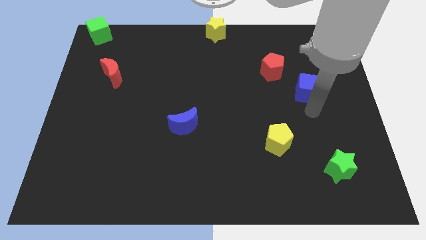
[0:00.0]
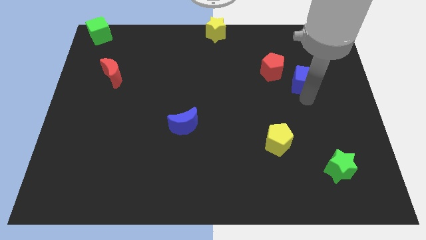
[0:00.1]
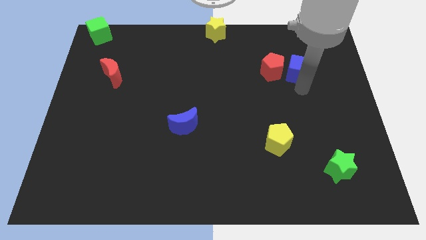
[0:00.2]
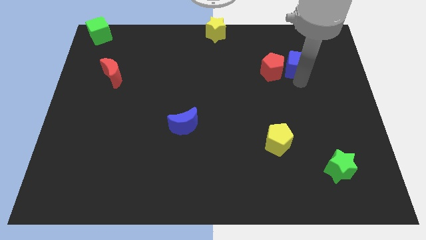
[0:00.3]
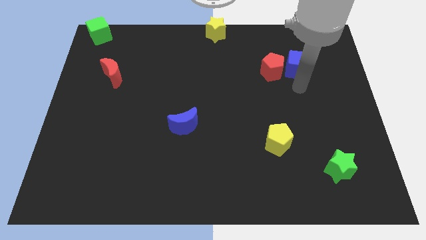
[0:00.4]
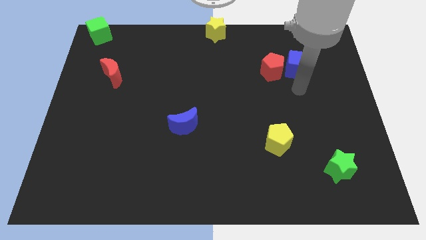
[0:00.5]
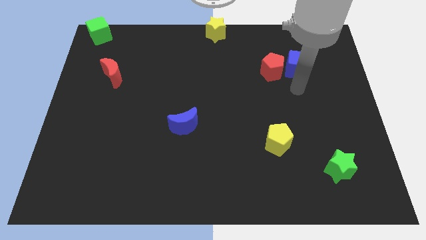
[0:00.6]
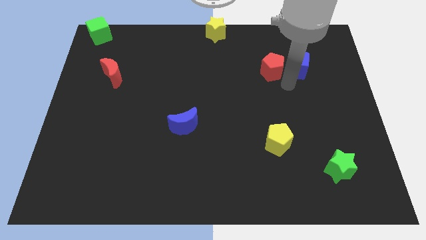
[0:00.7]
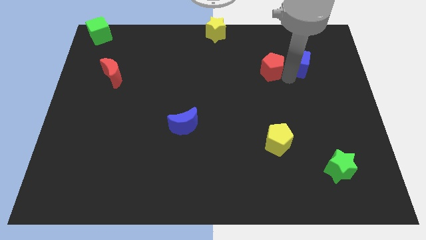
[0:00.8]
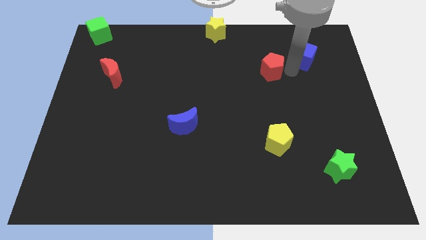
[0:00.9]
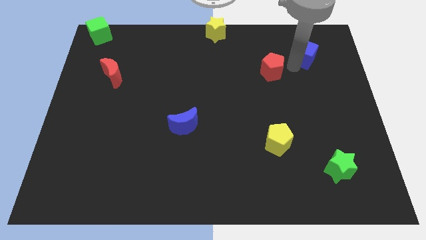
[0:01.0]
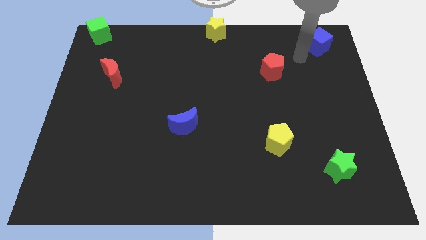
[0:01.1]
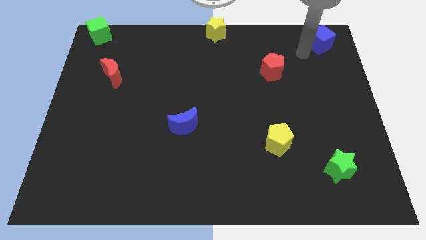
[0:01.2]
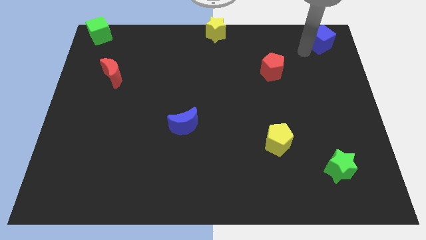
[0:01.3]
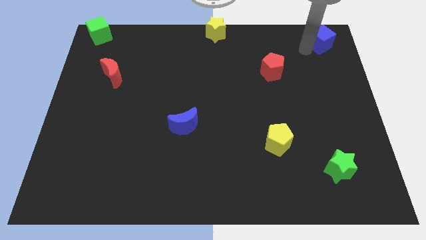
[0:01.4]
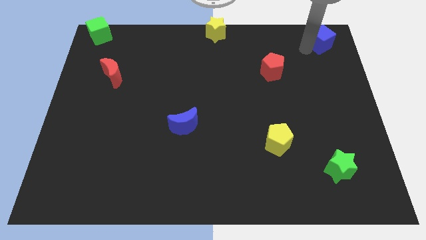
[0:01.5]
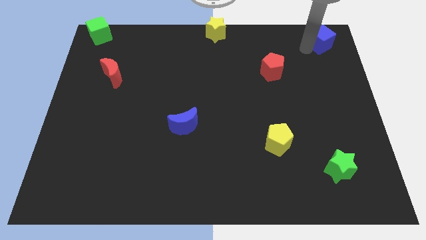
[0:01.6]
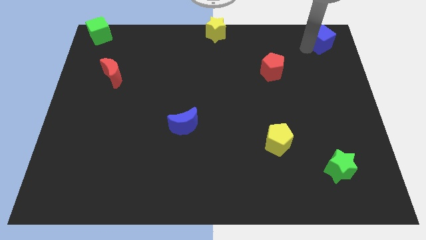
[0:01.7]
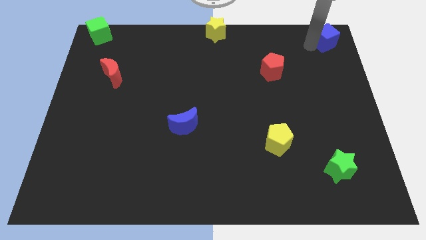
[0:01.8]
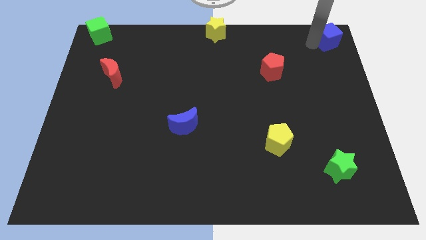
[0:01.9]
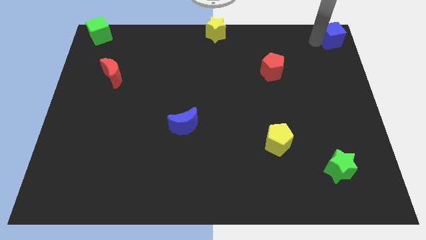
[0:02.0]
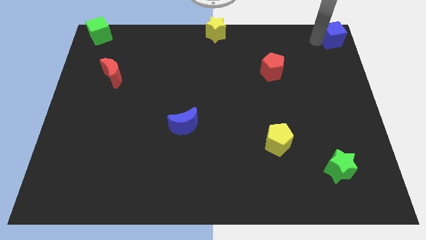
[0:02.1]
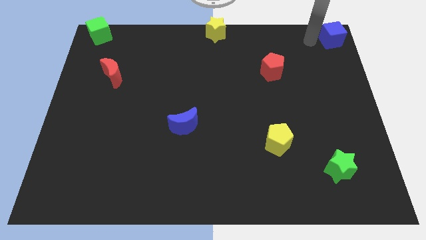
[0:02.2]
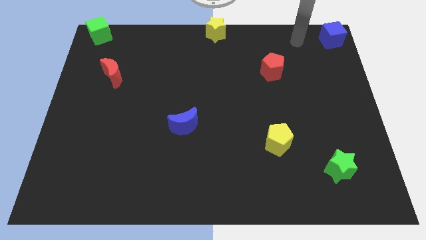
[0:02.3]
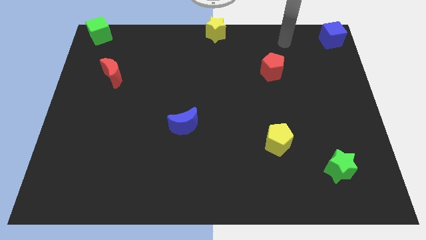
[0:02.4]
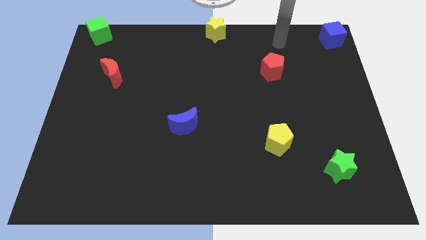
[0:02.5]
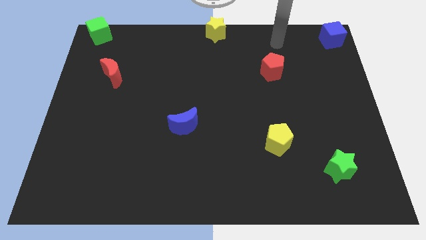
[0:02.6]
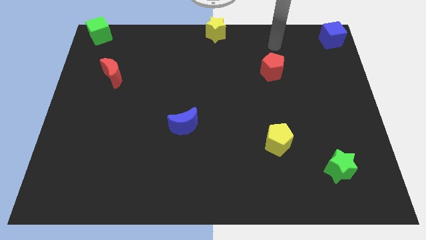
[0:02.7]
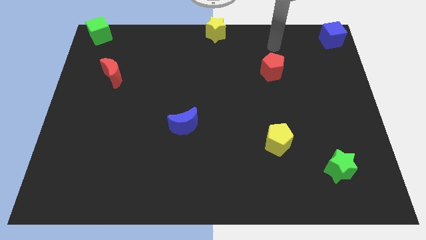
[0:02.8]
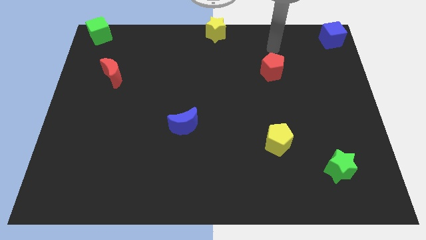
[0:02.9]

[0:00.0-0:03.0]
place blue cube right corner of the board

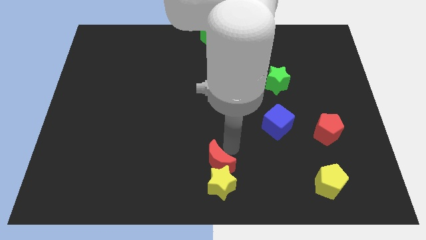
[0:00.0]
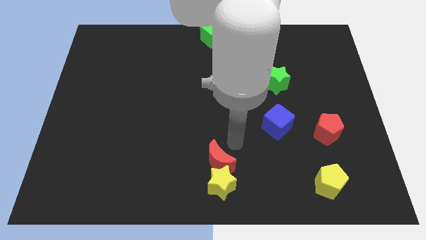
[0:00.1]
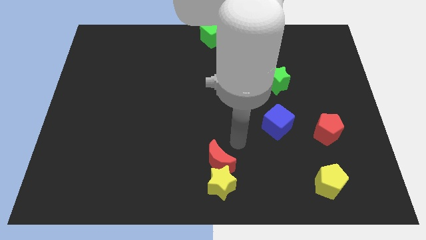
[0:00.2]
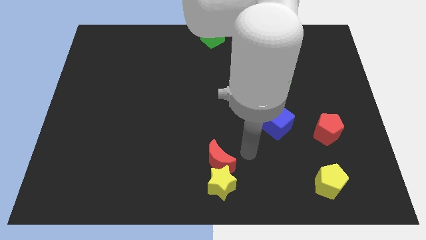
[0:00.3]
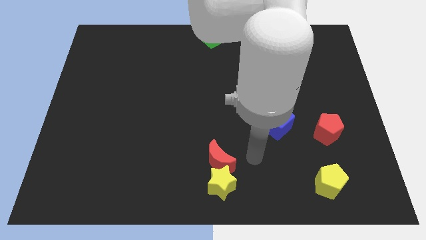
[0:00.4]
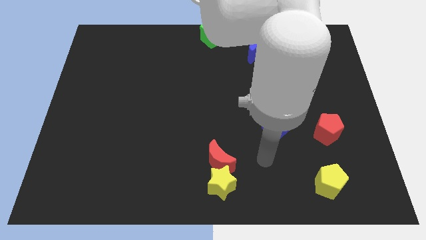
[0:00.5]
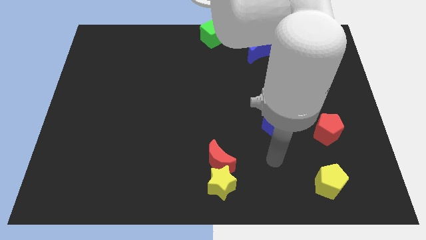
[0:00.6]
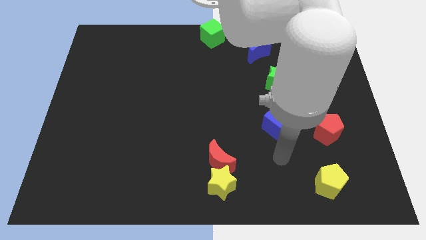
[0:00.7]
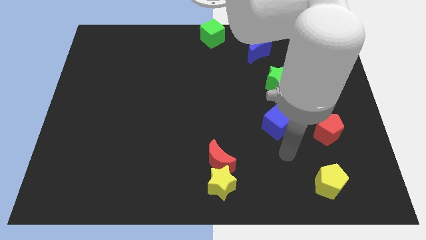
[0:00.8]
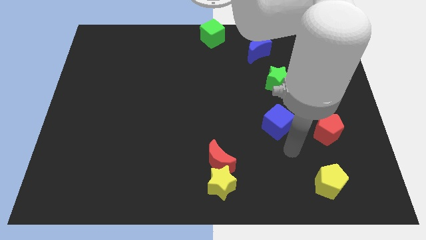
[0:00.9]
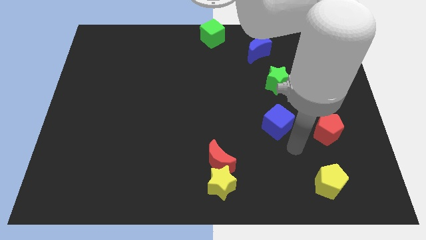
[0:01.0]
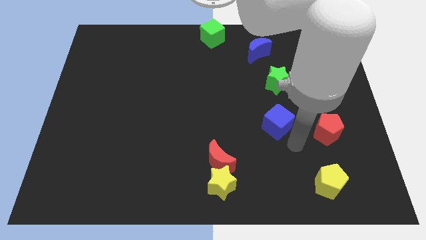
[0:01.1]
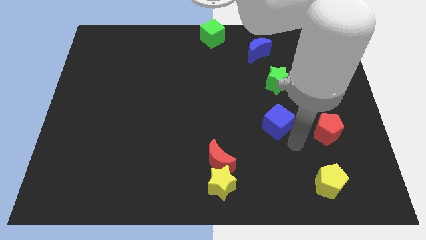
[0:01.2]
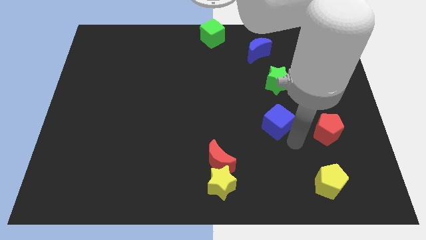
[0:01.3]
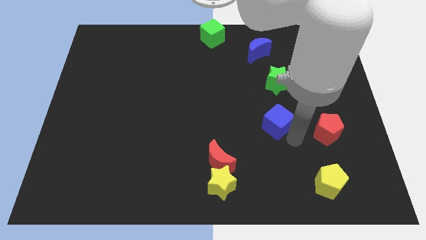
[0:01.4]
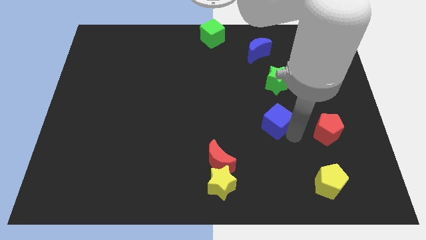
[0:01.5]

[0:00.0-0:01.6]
move the arm away from the red crescent

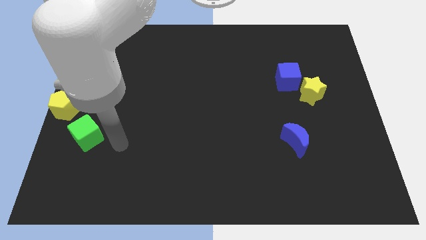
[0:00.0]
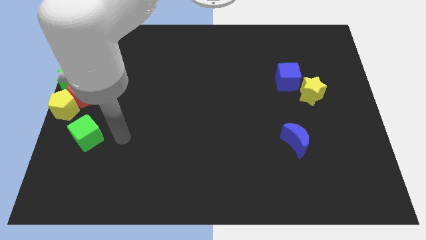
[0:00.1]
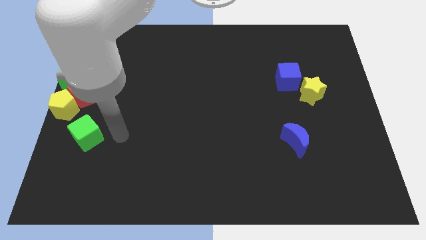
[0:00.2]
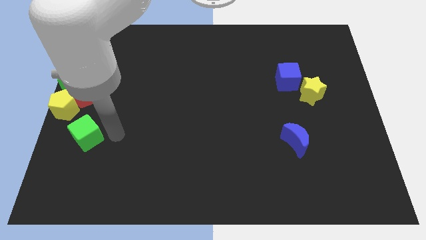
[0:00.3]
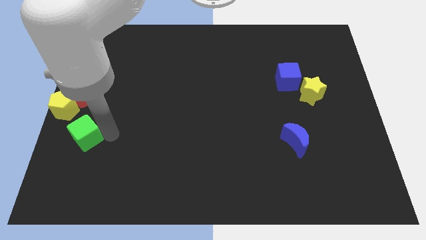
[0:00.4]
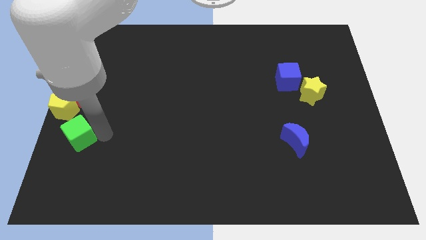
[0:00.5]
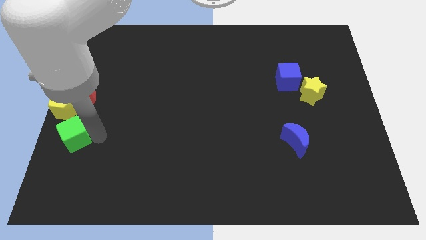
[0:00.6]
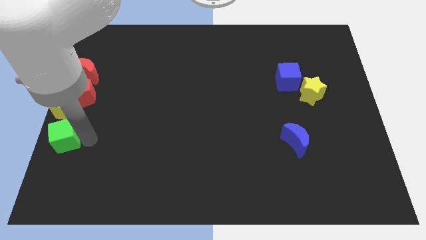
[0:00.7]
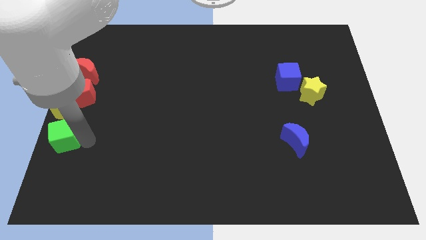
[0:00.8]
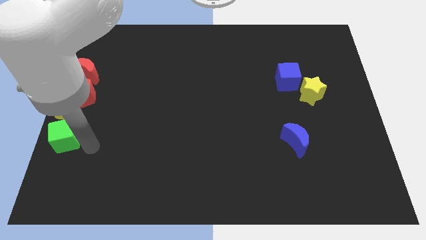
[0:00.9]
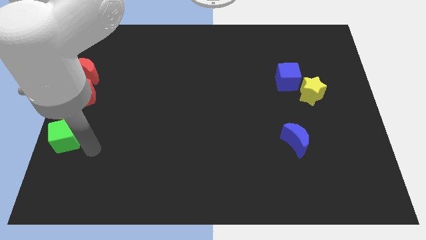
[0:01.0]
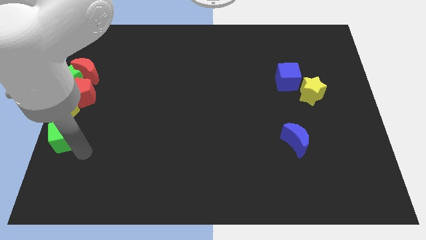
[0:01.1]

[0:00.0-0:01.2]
put the green cube underneath the yellow pentagon

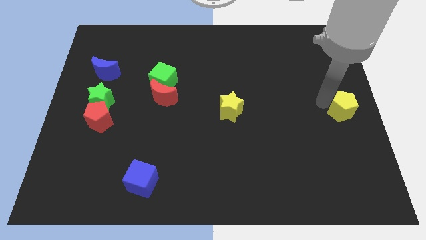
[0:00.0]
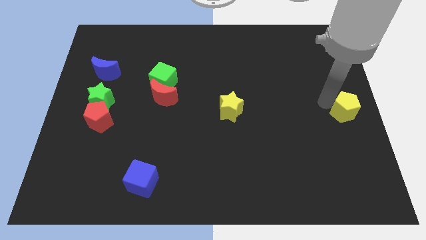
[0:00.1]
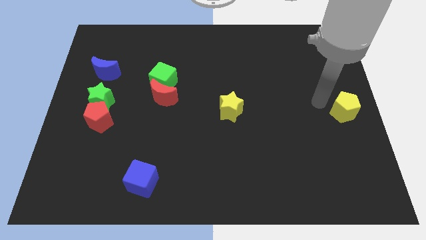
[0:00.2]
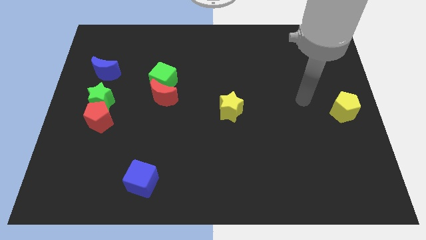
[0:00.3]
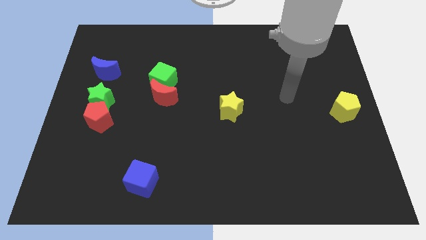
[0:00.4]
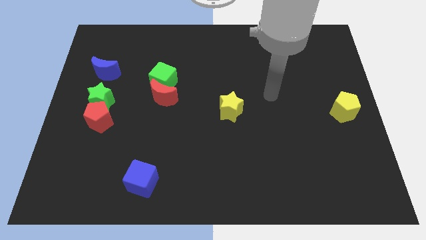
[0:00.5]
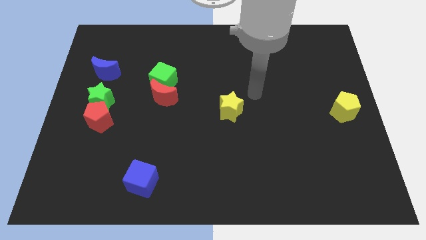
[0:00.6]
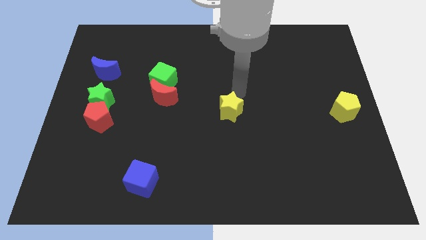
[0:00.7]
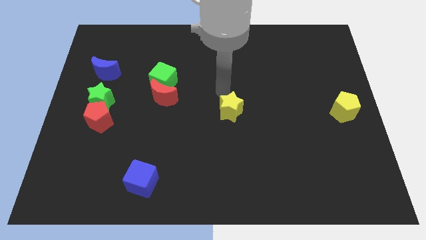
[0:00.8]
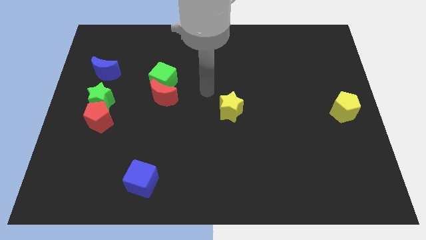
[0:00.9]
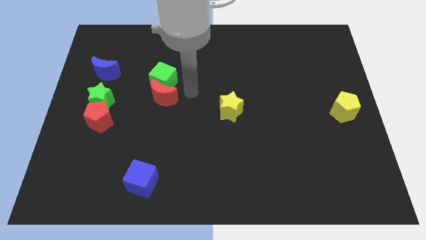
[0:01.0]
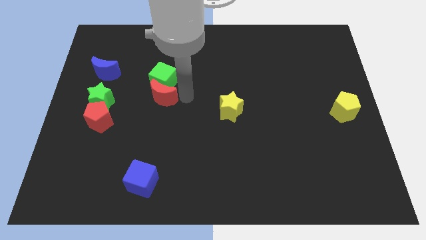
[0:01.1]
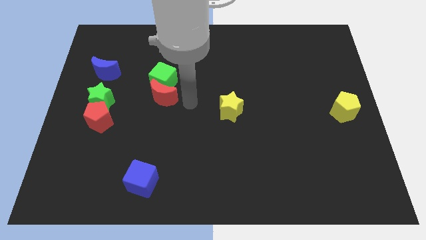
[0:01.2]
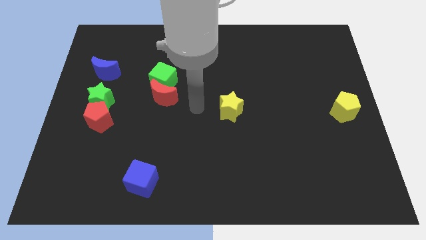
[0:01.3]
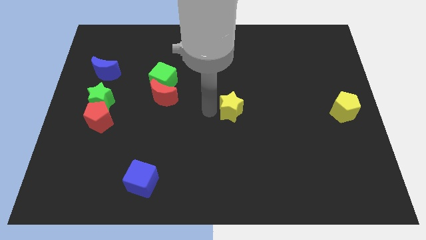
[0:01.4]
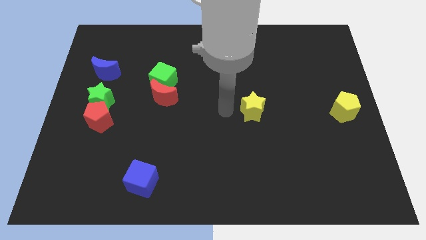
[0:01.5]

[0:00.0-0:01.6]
place your hand to the left of the yellow star

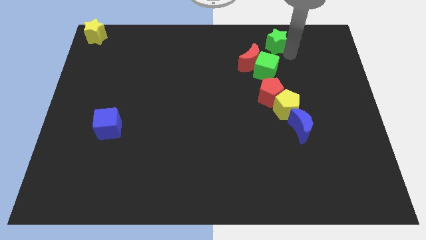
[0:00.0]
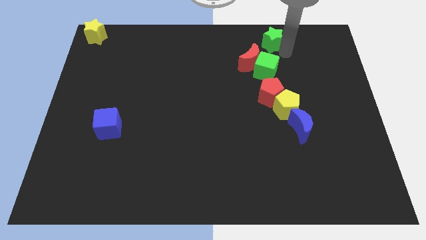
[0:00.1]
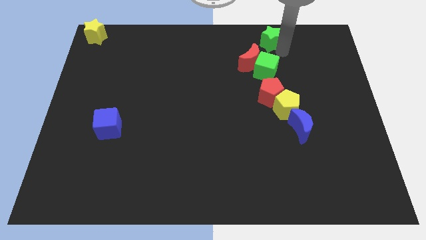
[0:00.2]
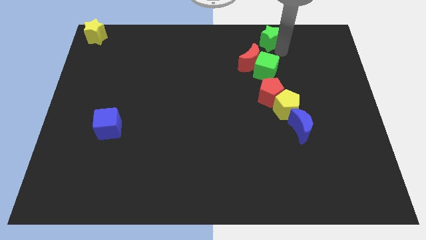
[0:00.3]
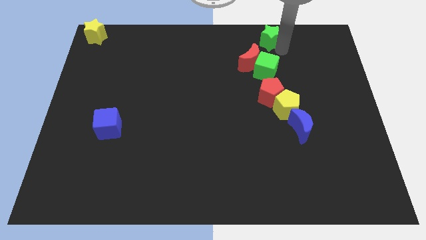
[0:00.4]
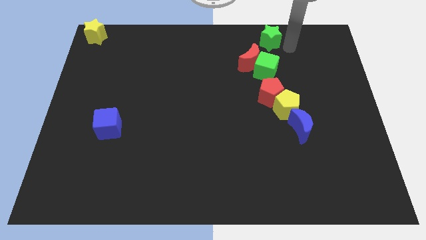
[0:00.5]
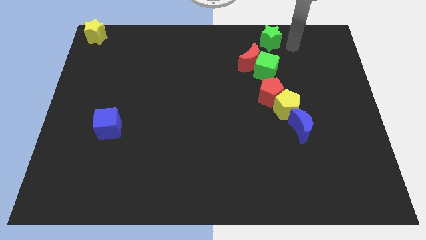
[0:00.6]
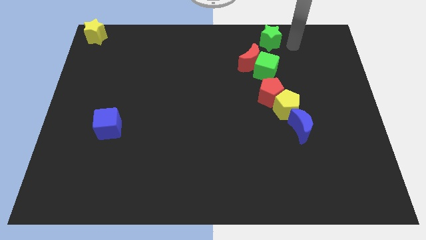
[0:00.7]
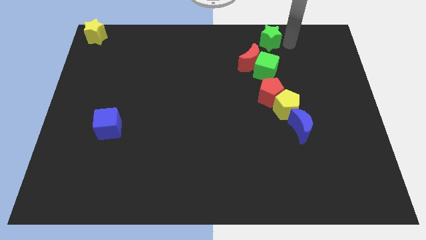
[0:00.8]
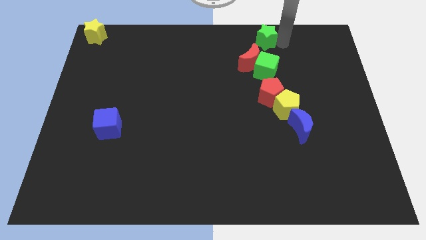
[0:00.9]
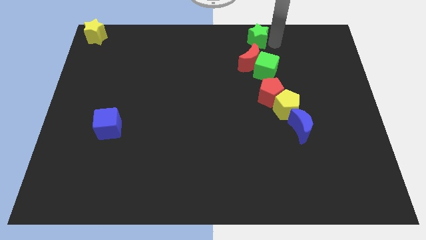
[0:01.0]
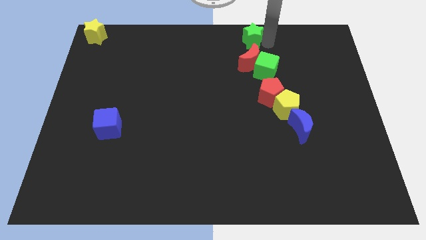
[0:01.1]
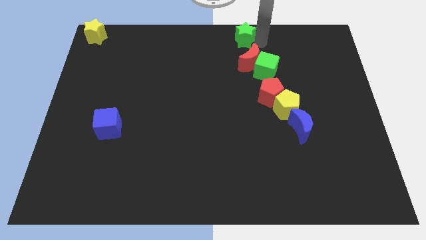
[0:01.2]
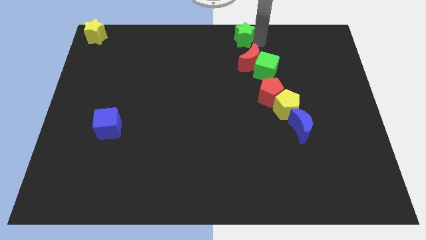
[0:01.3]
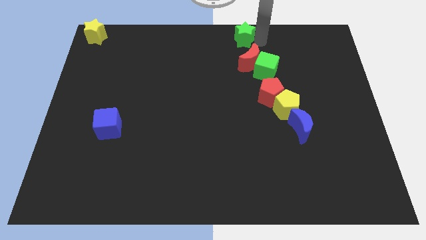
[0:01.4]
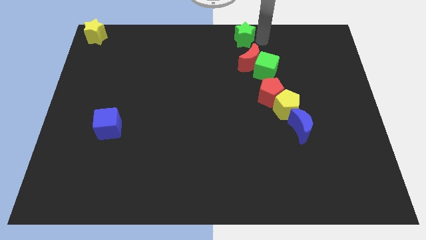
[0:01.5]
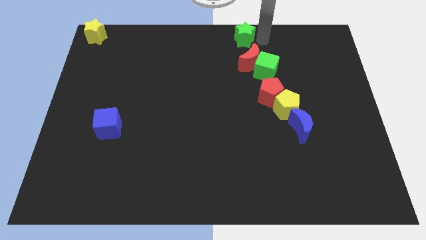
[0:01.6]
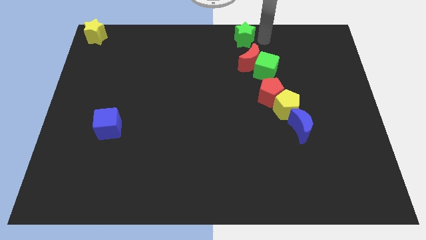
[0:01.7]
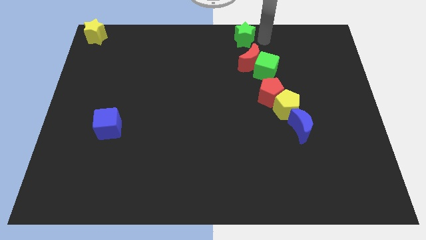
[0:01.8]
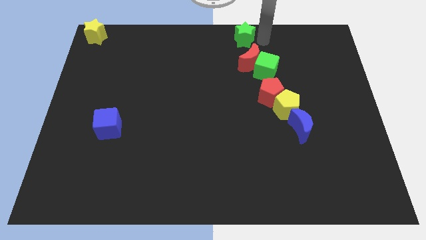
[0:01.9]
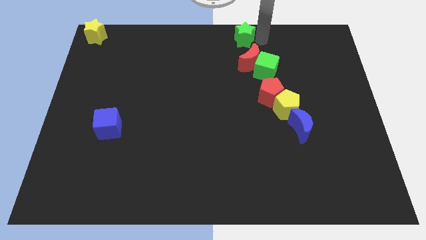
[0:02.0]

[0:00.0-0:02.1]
move the green star above the red moon
